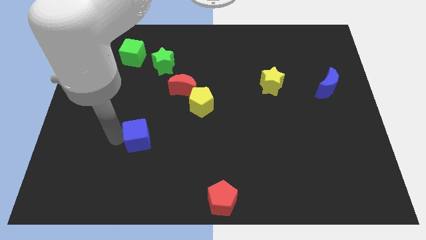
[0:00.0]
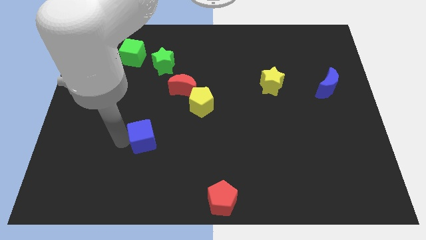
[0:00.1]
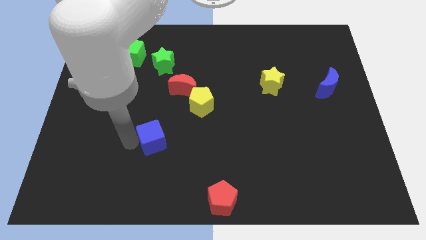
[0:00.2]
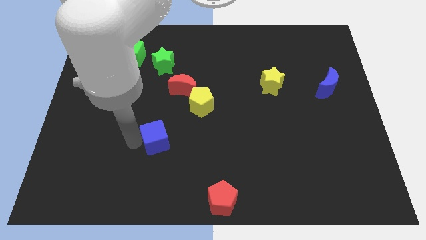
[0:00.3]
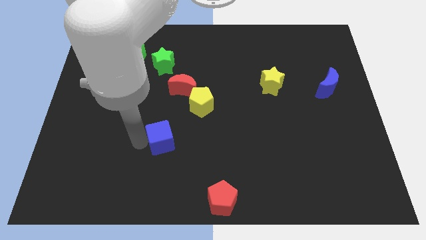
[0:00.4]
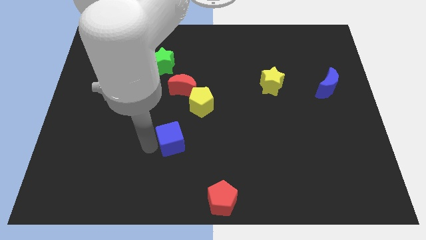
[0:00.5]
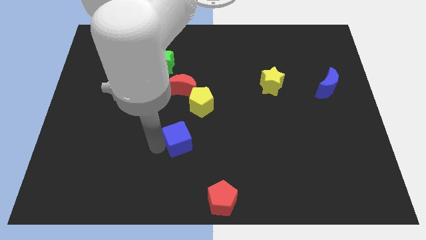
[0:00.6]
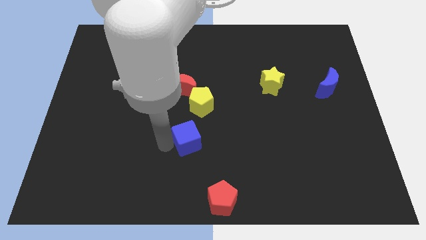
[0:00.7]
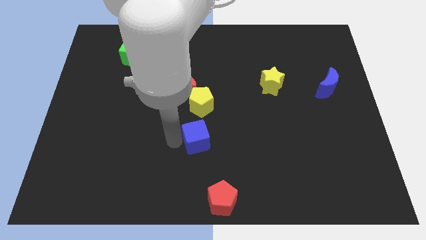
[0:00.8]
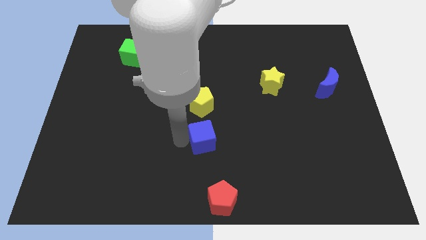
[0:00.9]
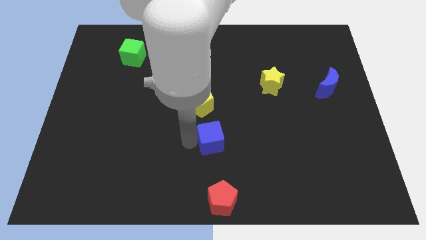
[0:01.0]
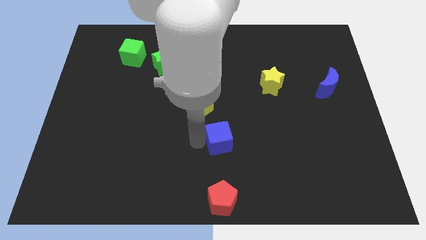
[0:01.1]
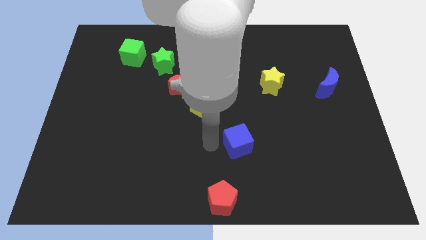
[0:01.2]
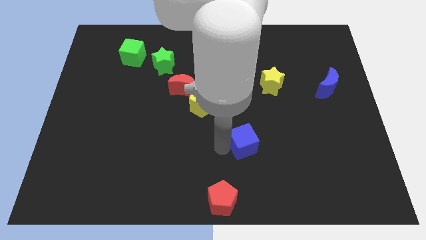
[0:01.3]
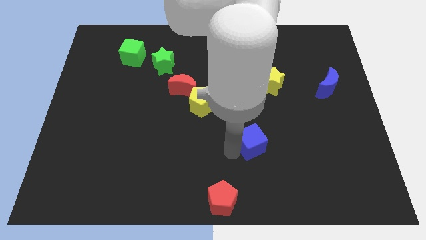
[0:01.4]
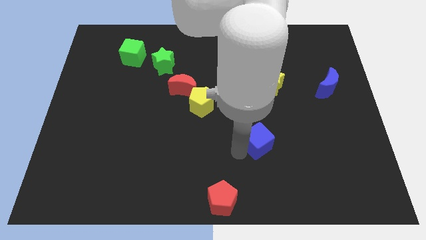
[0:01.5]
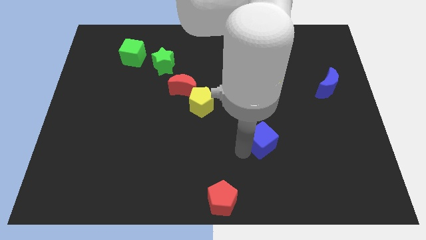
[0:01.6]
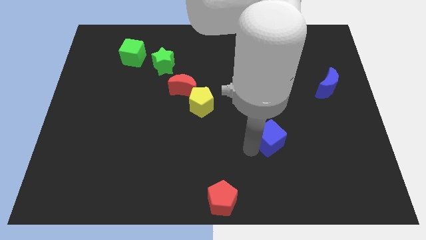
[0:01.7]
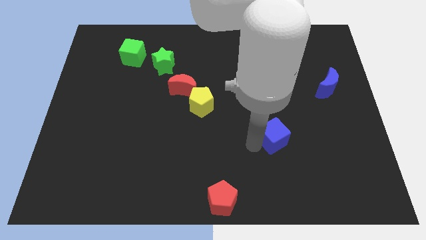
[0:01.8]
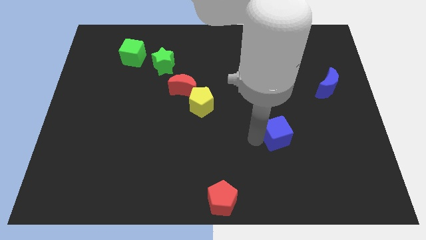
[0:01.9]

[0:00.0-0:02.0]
move the blue cube to the right side of the board

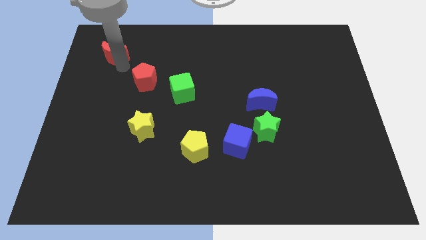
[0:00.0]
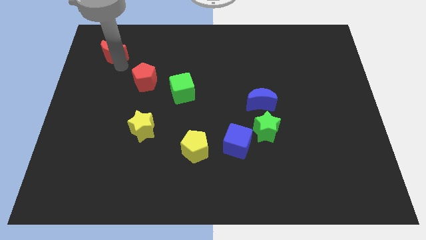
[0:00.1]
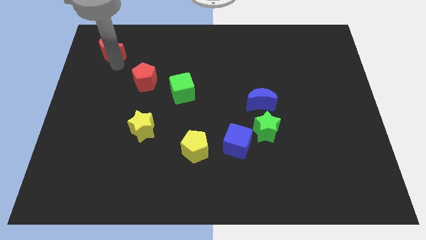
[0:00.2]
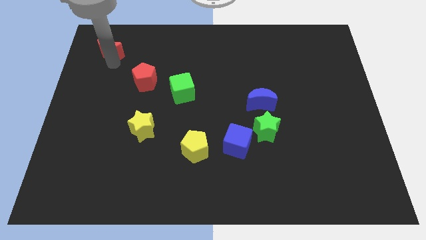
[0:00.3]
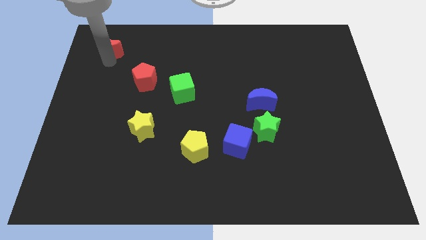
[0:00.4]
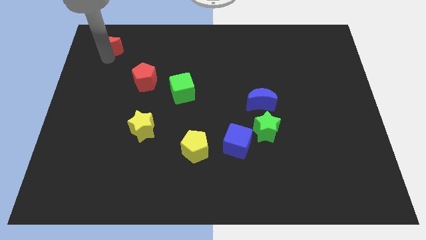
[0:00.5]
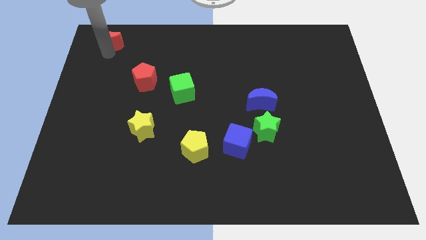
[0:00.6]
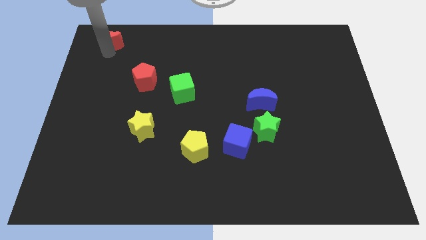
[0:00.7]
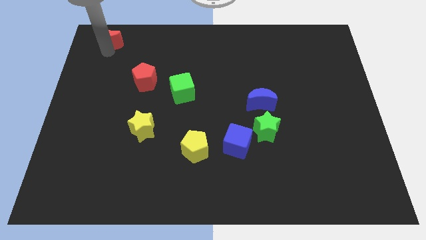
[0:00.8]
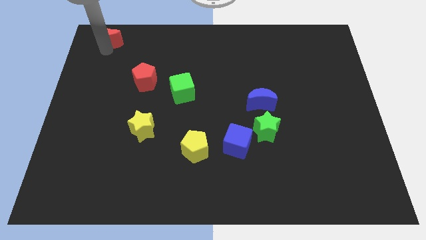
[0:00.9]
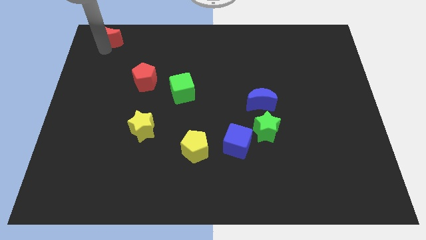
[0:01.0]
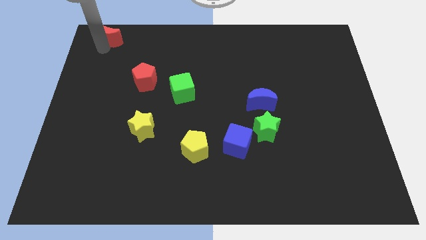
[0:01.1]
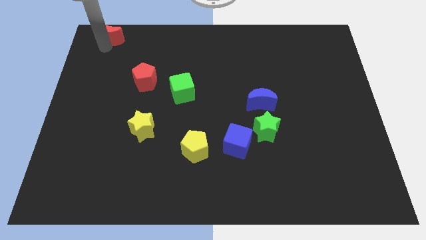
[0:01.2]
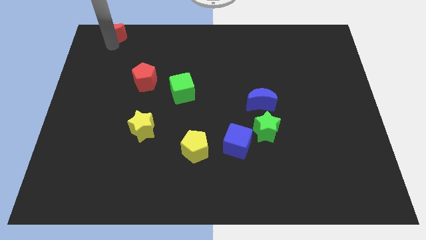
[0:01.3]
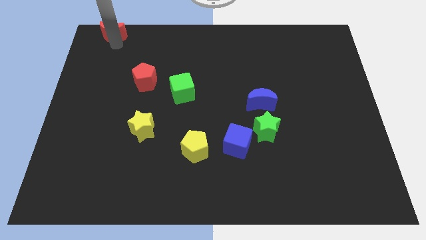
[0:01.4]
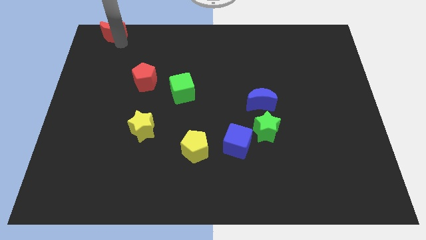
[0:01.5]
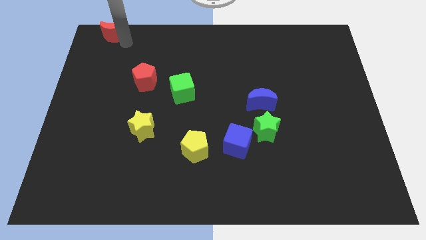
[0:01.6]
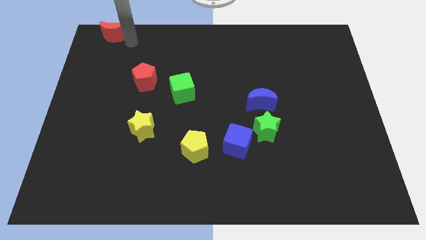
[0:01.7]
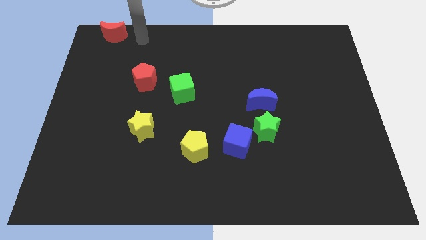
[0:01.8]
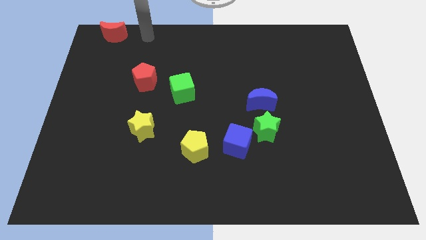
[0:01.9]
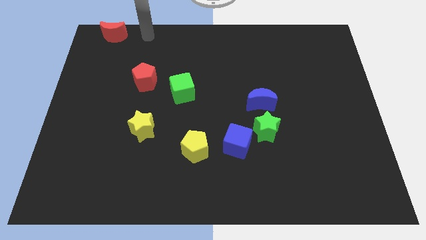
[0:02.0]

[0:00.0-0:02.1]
move the red crescent diagonally to red pentagon

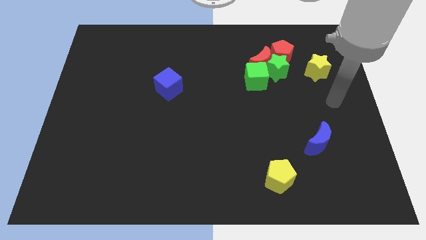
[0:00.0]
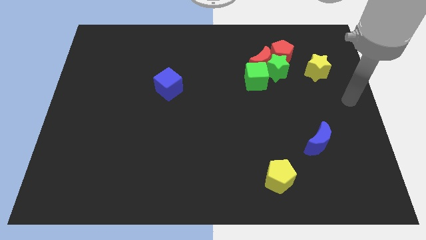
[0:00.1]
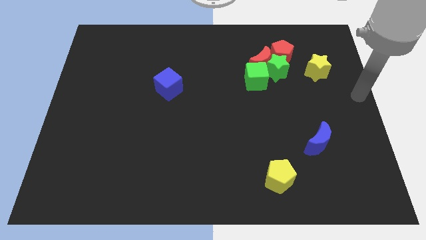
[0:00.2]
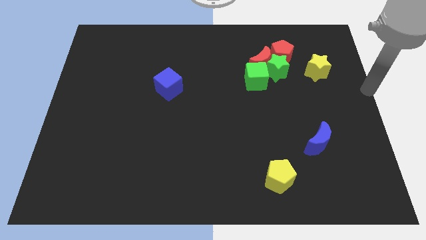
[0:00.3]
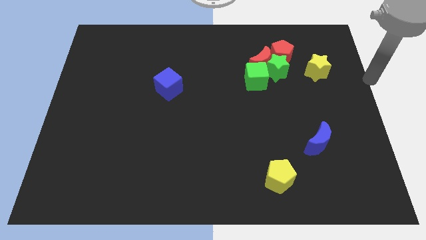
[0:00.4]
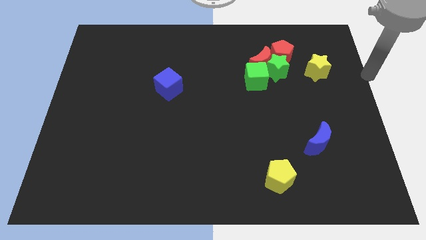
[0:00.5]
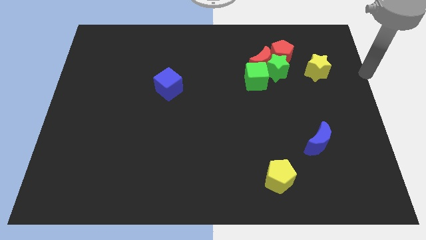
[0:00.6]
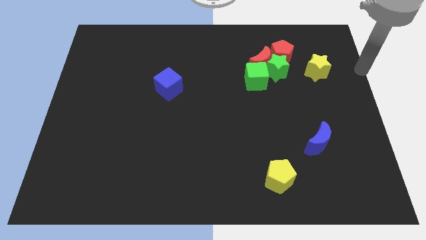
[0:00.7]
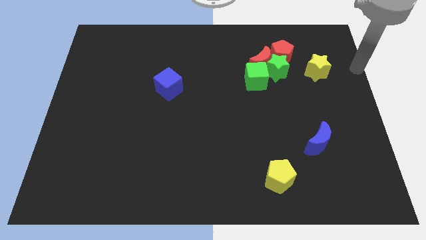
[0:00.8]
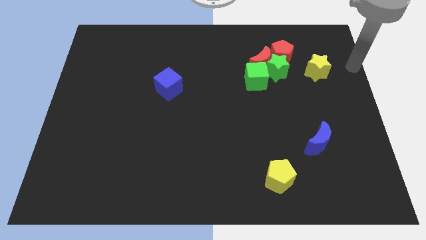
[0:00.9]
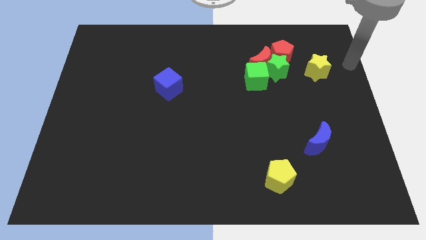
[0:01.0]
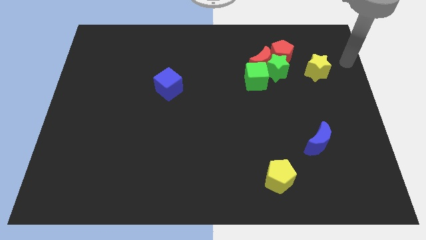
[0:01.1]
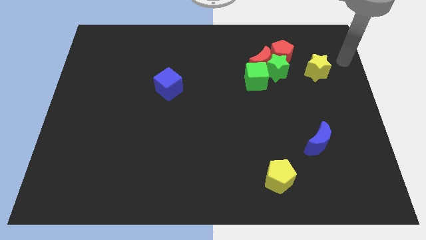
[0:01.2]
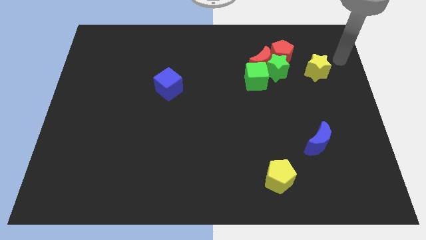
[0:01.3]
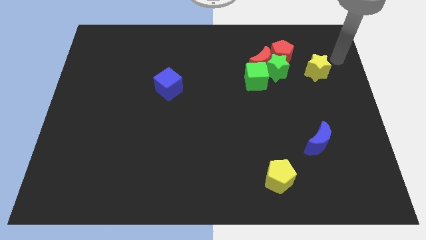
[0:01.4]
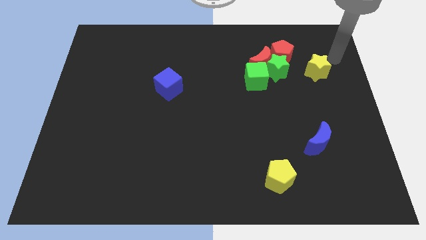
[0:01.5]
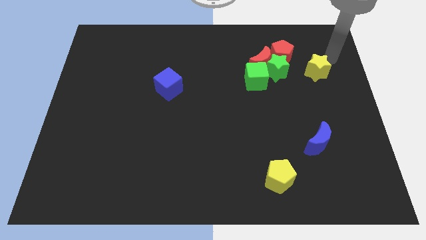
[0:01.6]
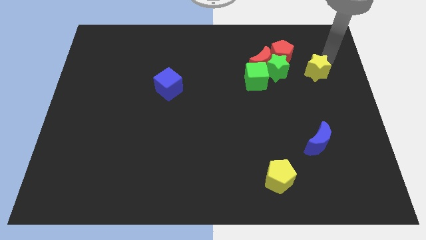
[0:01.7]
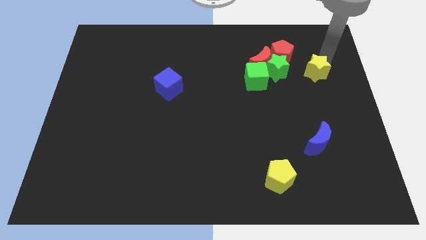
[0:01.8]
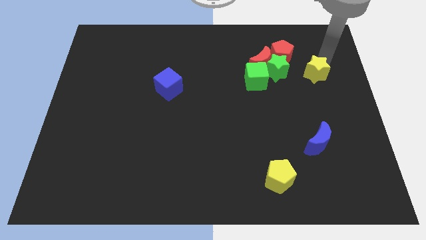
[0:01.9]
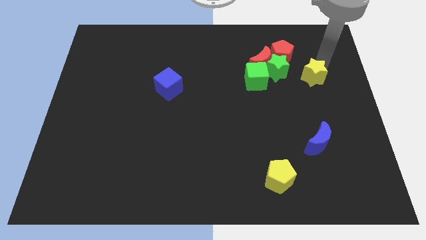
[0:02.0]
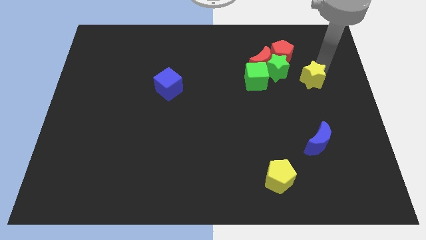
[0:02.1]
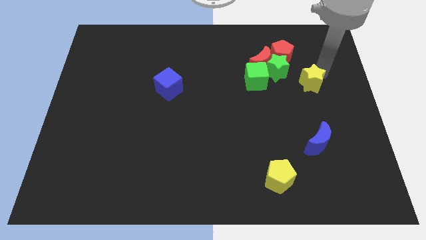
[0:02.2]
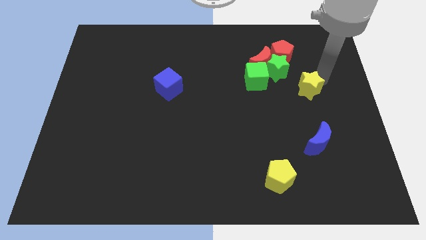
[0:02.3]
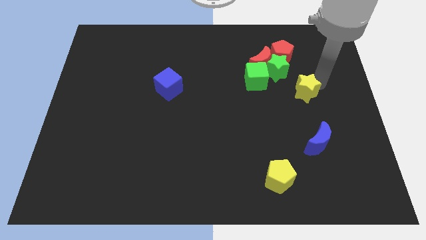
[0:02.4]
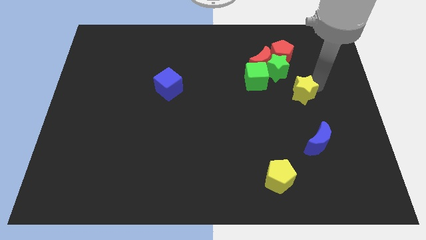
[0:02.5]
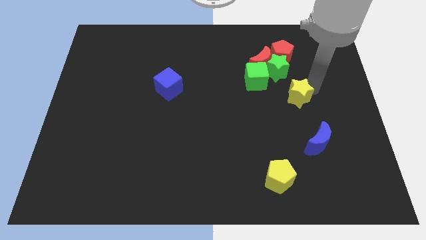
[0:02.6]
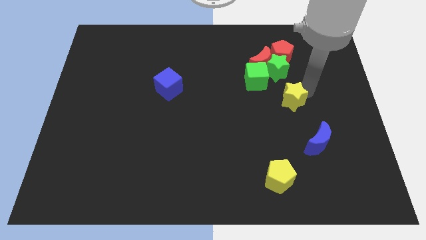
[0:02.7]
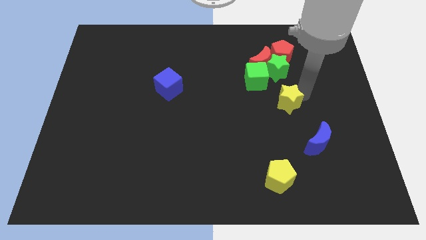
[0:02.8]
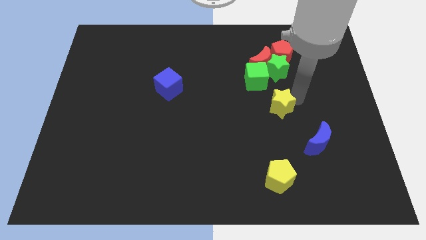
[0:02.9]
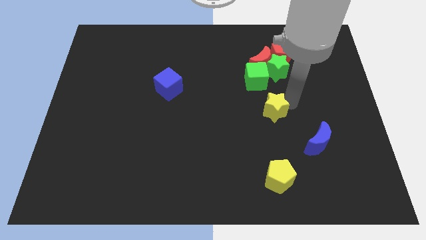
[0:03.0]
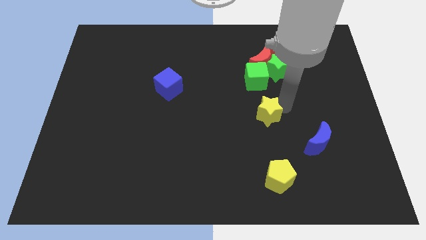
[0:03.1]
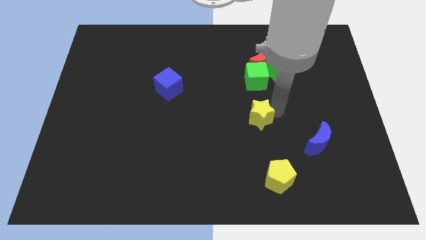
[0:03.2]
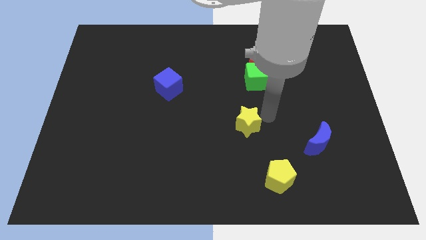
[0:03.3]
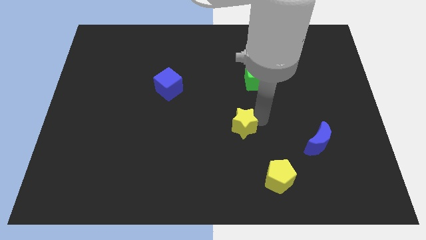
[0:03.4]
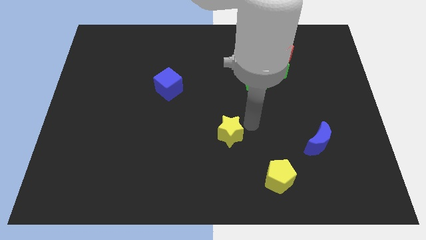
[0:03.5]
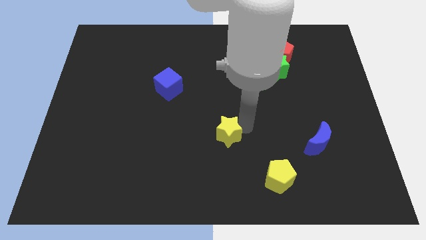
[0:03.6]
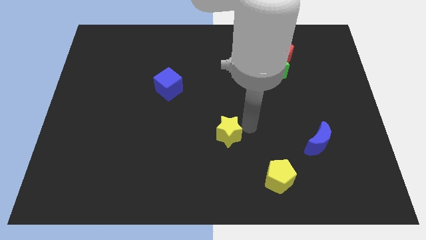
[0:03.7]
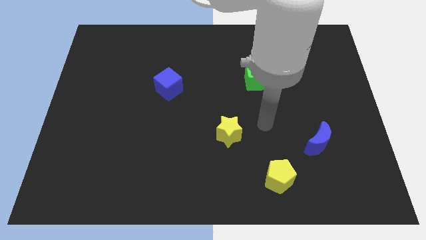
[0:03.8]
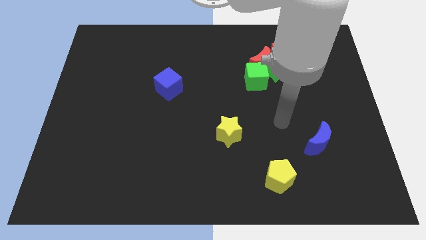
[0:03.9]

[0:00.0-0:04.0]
move the yellow star to the center side

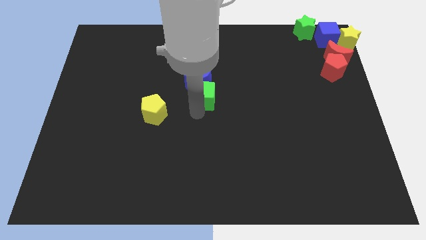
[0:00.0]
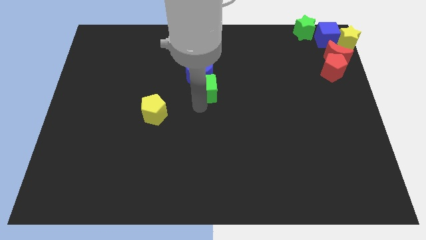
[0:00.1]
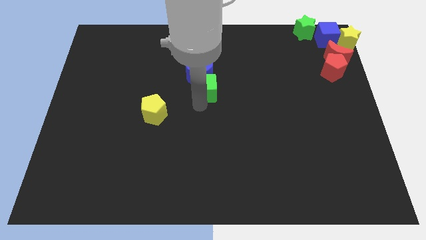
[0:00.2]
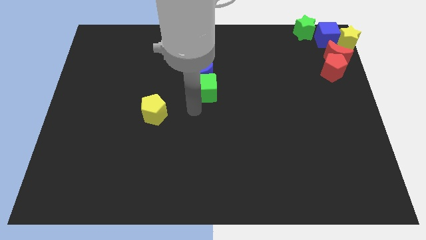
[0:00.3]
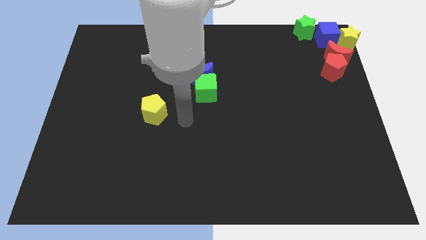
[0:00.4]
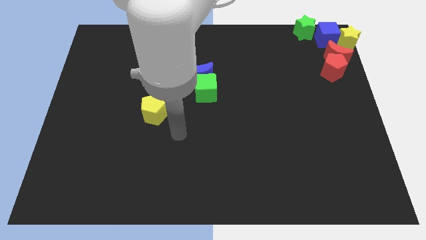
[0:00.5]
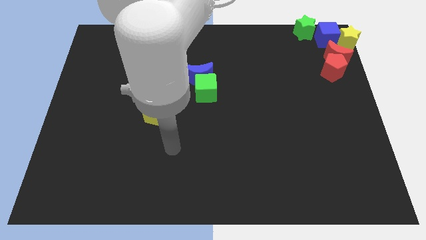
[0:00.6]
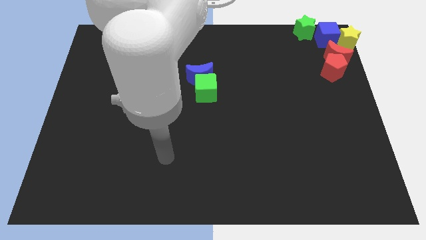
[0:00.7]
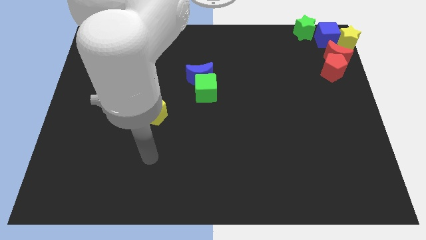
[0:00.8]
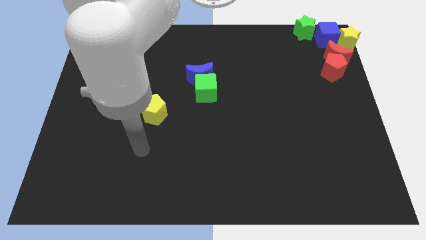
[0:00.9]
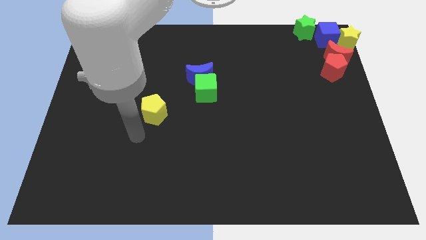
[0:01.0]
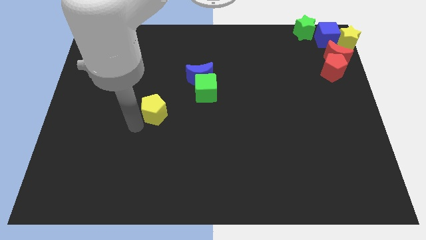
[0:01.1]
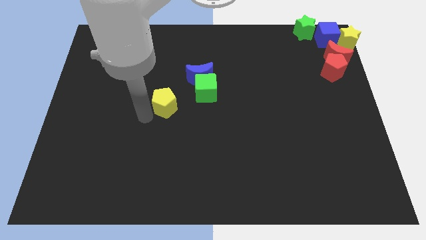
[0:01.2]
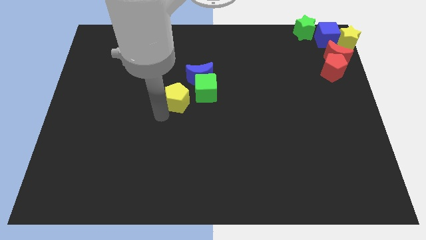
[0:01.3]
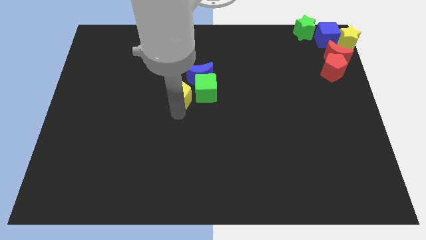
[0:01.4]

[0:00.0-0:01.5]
place yellow pentagon to the left side of the green cube
